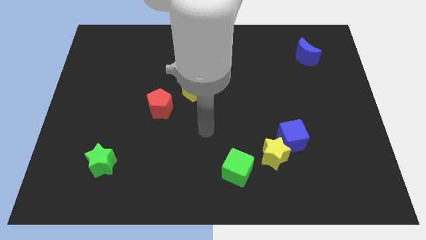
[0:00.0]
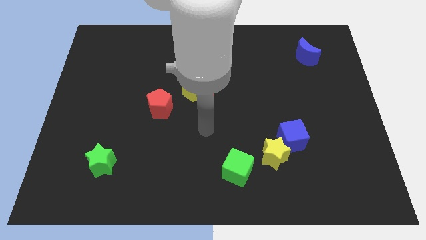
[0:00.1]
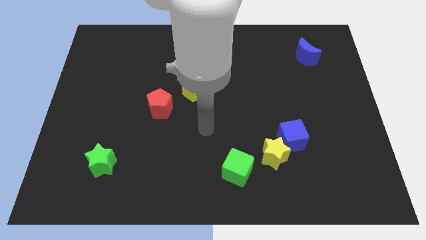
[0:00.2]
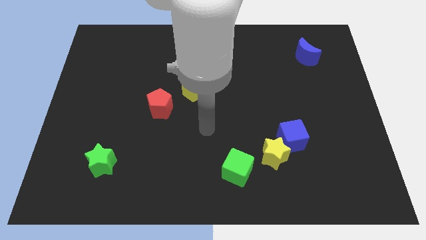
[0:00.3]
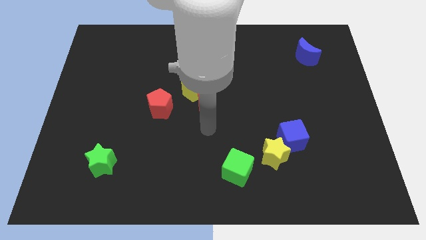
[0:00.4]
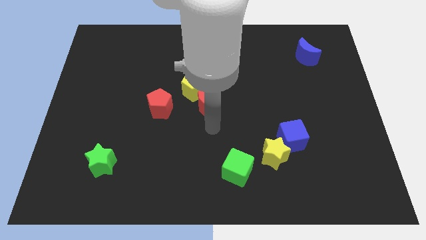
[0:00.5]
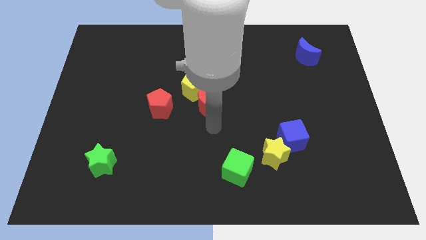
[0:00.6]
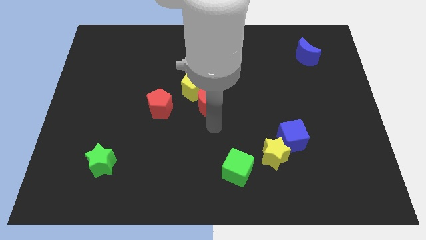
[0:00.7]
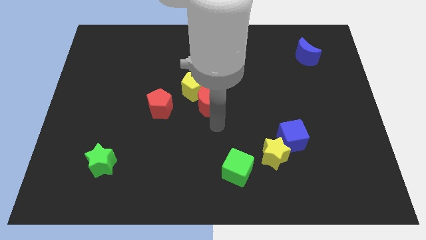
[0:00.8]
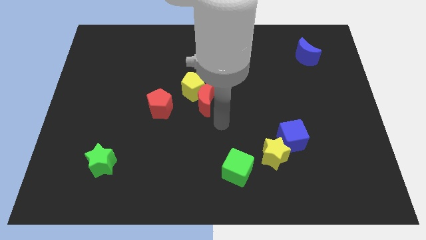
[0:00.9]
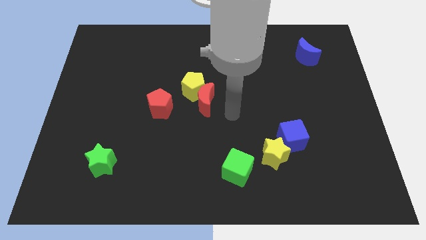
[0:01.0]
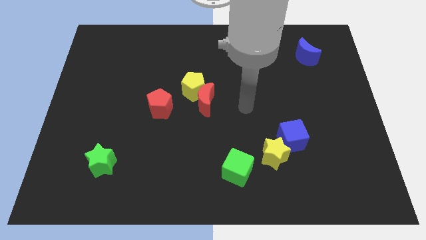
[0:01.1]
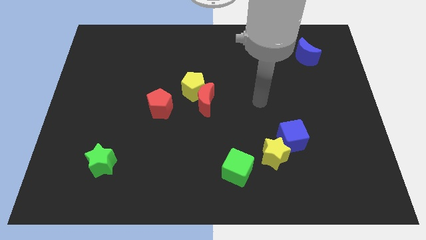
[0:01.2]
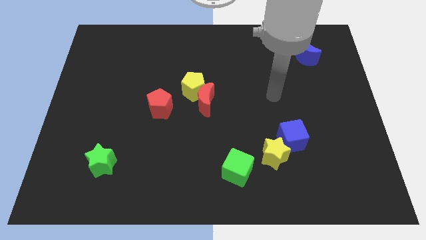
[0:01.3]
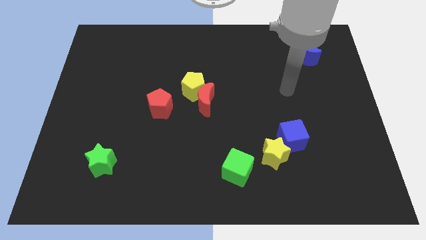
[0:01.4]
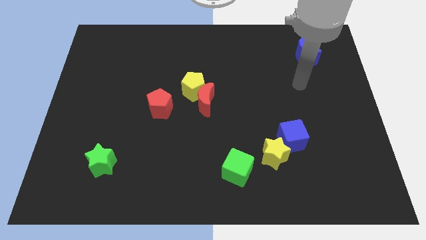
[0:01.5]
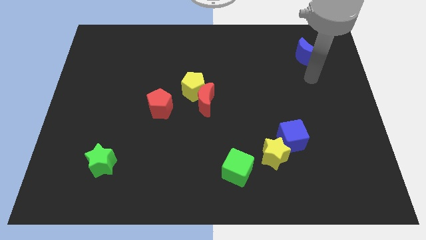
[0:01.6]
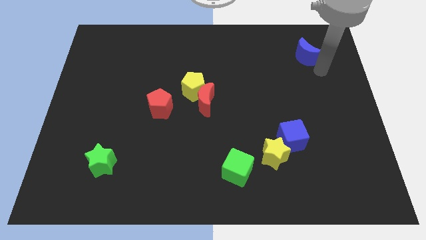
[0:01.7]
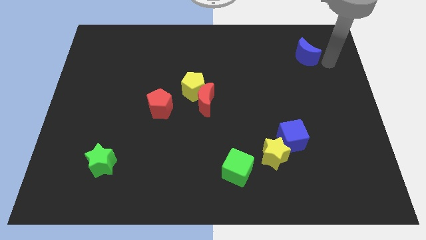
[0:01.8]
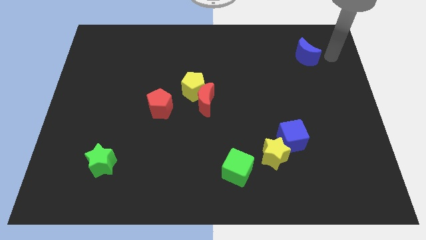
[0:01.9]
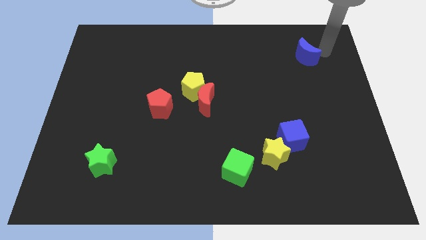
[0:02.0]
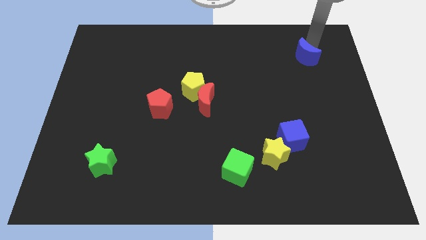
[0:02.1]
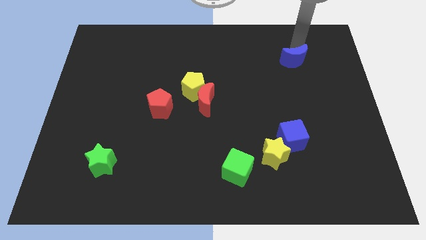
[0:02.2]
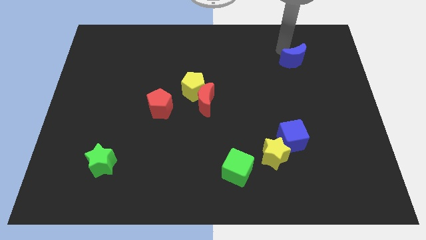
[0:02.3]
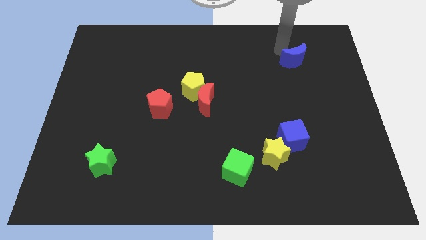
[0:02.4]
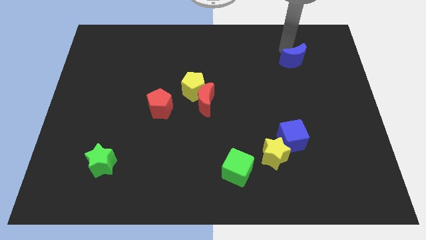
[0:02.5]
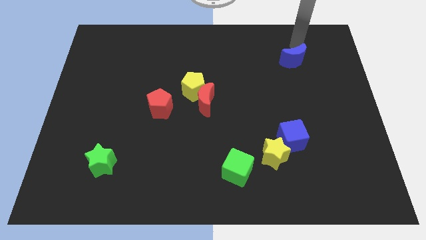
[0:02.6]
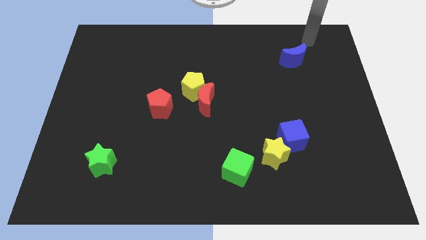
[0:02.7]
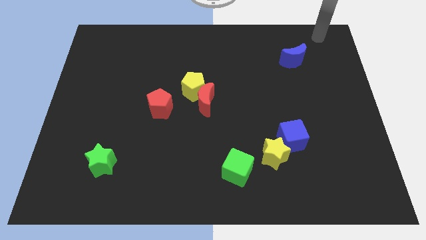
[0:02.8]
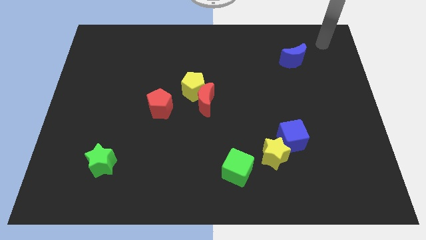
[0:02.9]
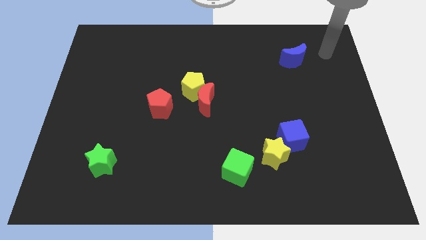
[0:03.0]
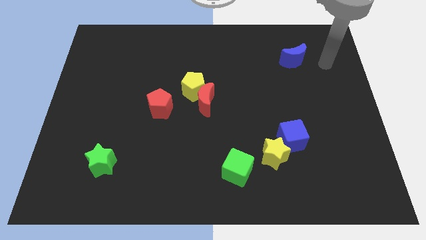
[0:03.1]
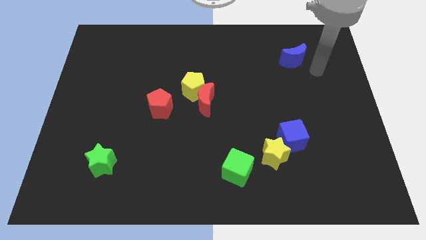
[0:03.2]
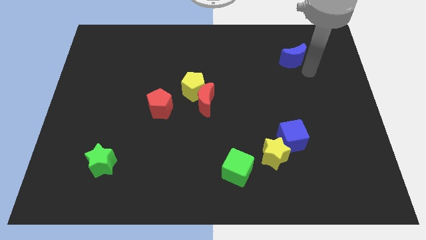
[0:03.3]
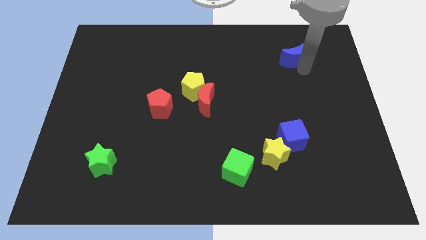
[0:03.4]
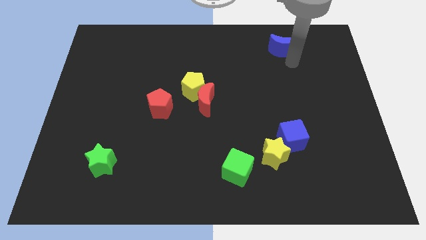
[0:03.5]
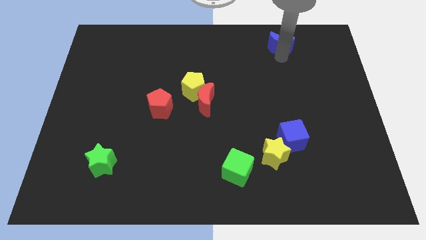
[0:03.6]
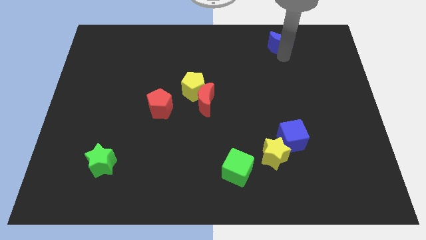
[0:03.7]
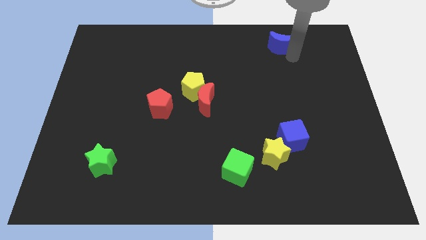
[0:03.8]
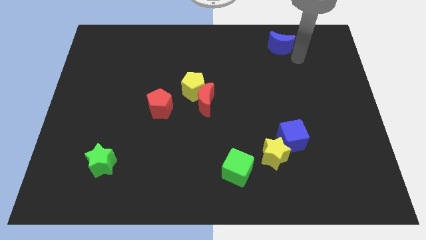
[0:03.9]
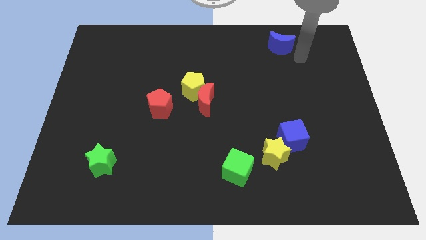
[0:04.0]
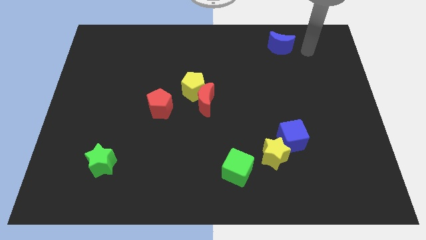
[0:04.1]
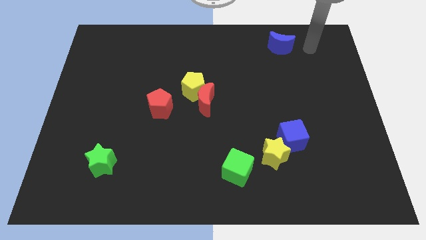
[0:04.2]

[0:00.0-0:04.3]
move the blue crescent towards the top of the board

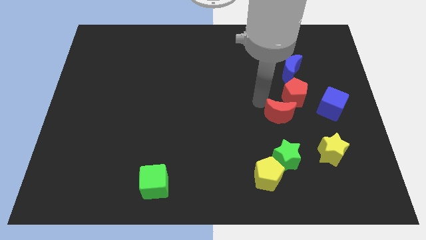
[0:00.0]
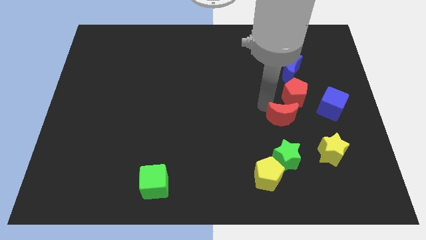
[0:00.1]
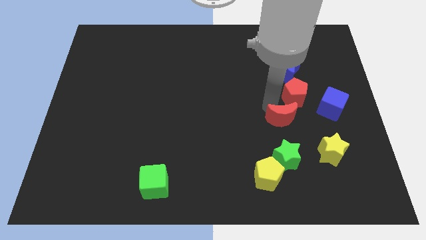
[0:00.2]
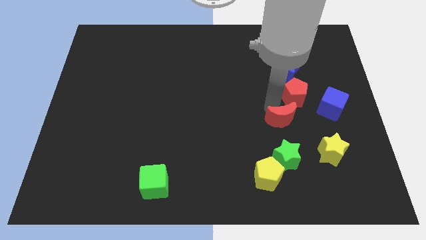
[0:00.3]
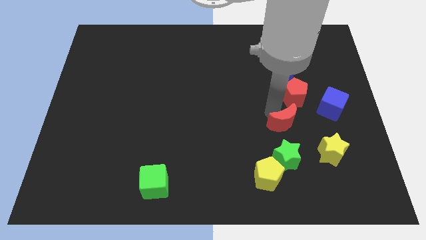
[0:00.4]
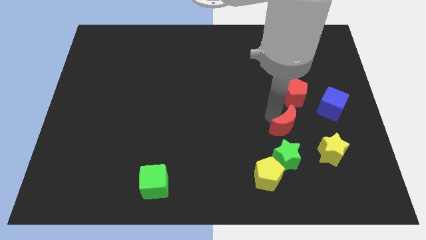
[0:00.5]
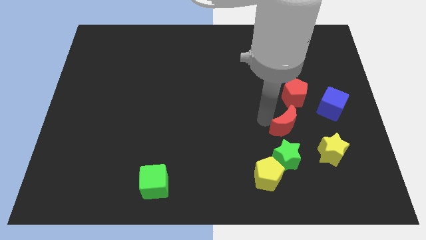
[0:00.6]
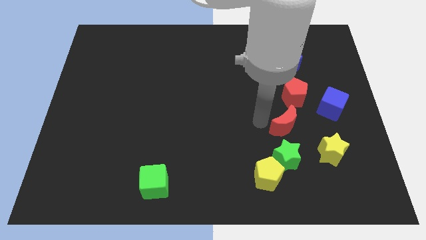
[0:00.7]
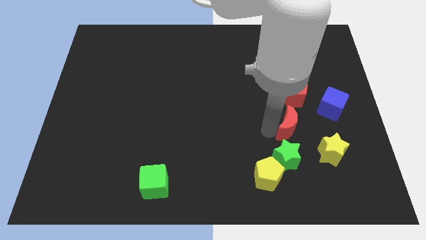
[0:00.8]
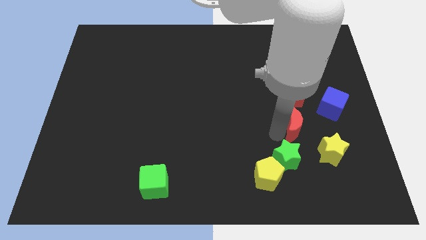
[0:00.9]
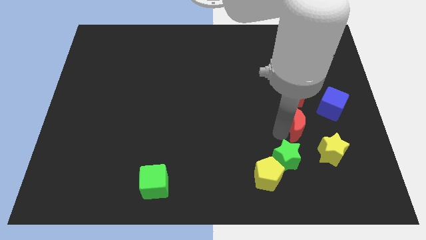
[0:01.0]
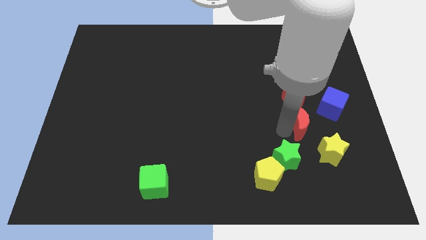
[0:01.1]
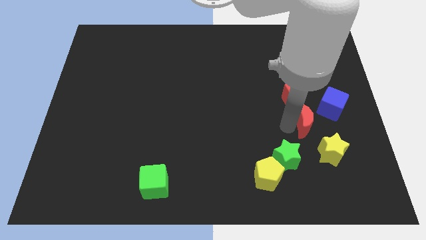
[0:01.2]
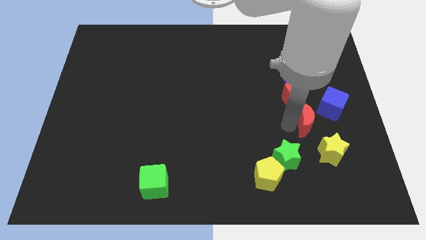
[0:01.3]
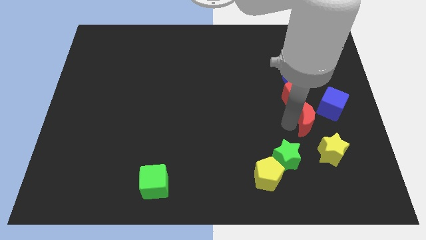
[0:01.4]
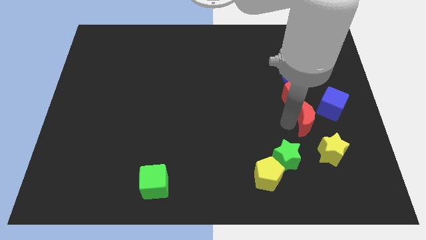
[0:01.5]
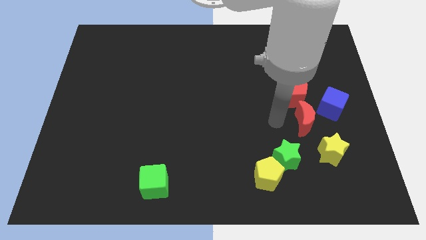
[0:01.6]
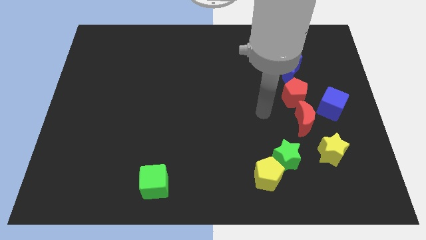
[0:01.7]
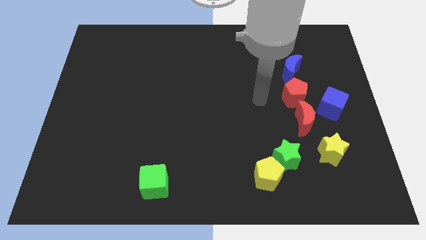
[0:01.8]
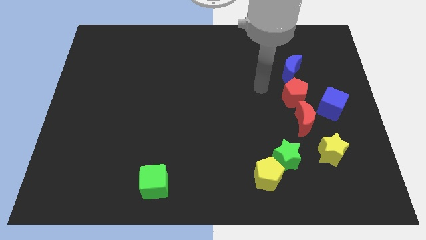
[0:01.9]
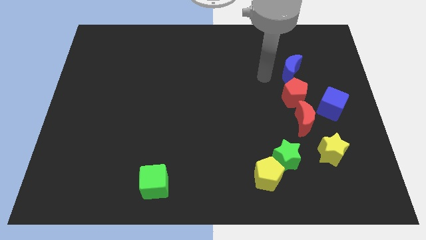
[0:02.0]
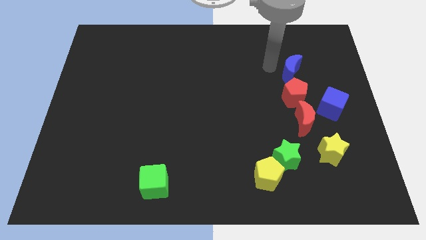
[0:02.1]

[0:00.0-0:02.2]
move the red moon at the bottom side of the red pentagon

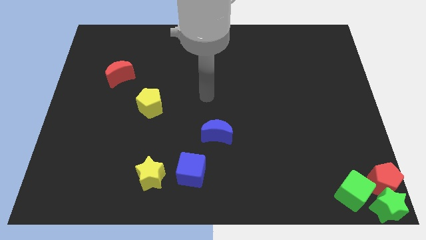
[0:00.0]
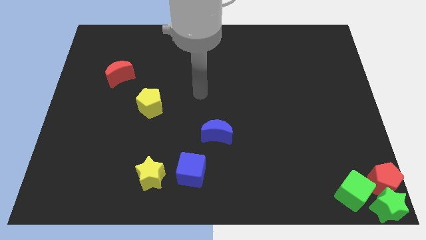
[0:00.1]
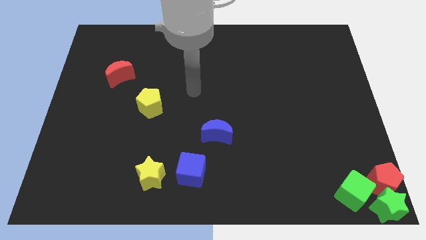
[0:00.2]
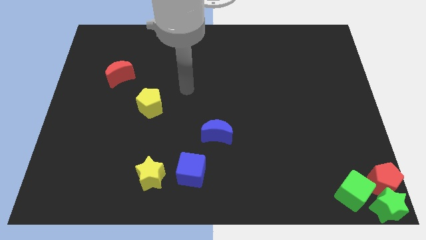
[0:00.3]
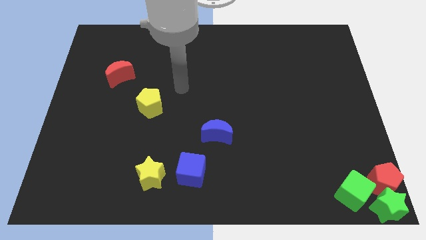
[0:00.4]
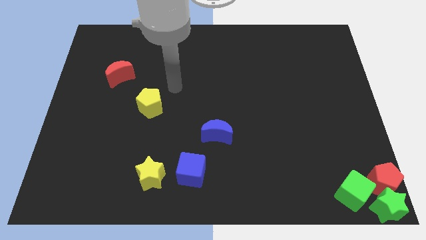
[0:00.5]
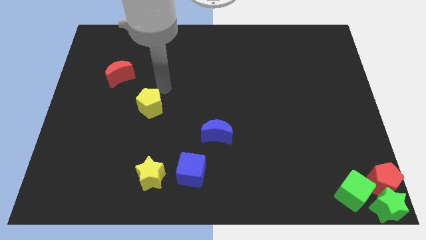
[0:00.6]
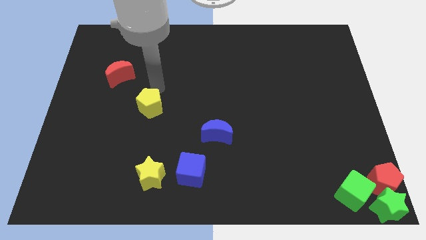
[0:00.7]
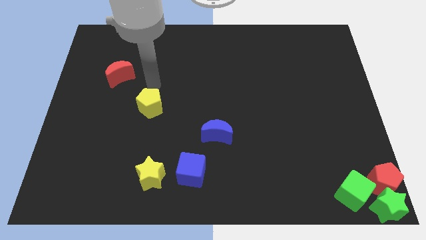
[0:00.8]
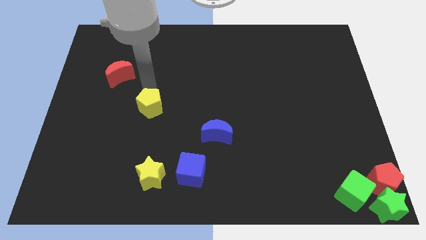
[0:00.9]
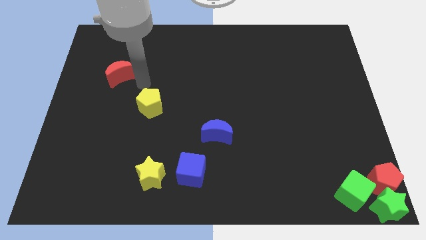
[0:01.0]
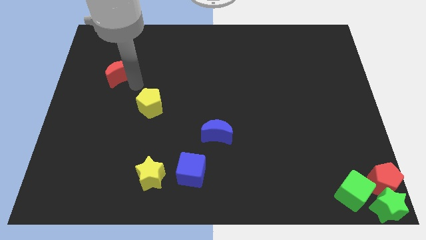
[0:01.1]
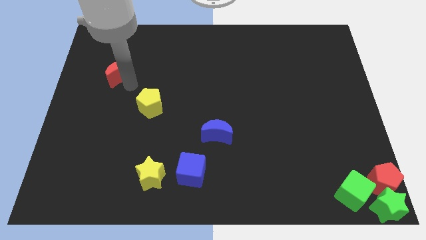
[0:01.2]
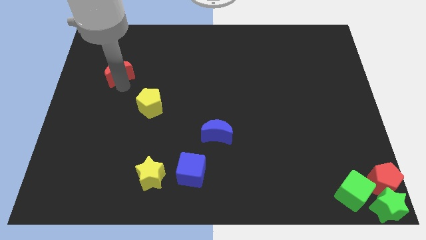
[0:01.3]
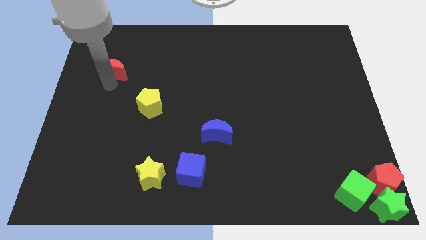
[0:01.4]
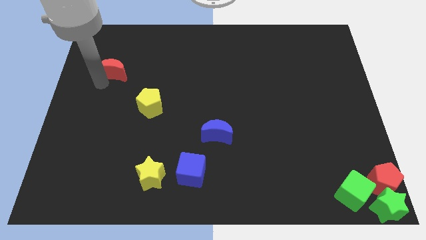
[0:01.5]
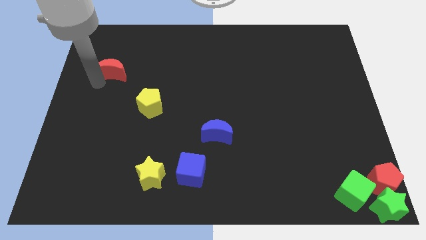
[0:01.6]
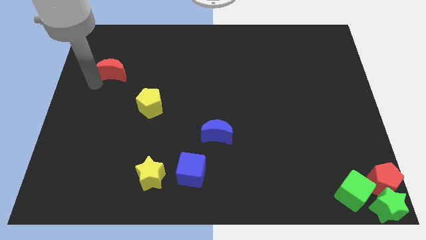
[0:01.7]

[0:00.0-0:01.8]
move your arm towards the red crescent

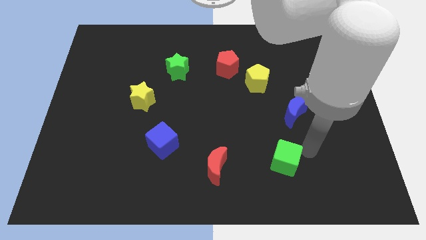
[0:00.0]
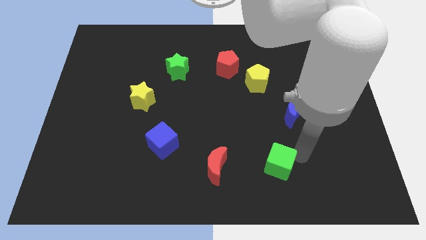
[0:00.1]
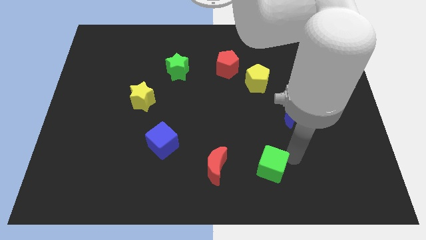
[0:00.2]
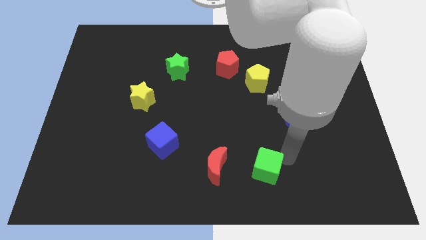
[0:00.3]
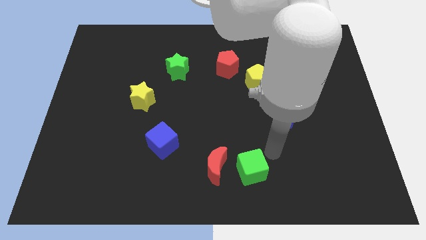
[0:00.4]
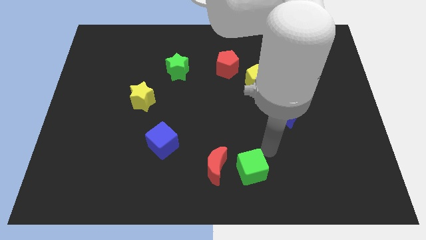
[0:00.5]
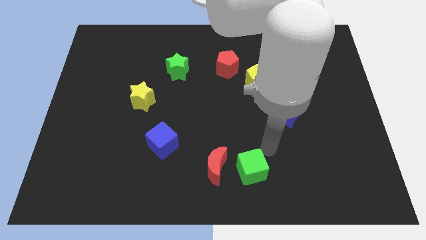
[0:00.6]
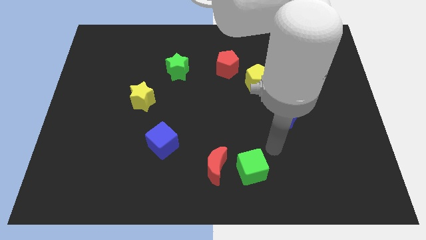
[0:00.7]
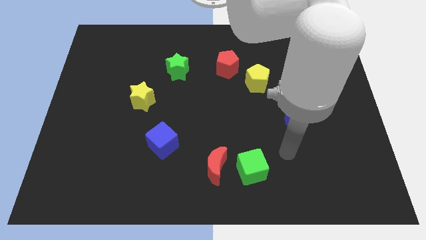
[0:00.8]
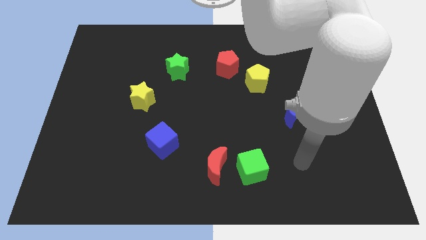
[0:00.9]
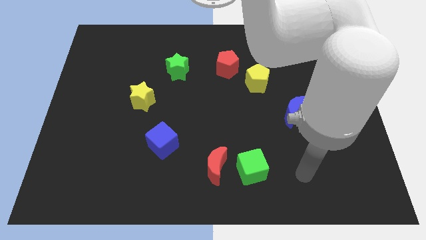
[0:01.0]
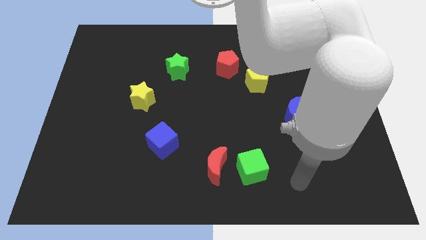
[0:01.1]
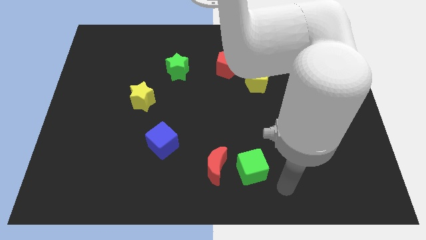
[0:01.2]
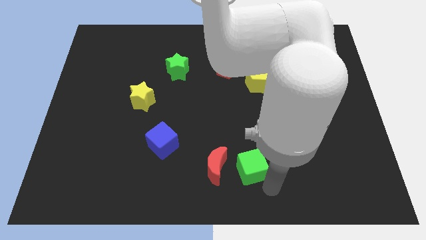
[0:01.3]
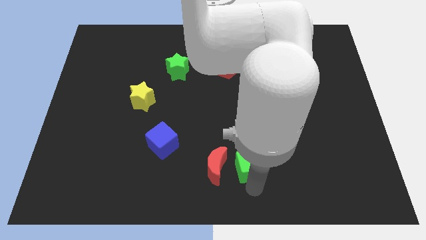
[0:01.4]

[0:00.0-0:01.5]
push the green cube close to the red moon
